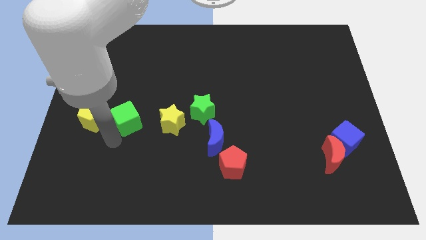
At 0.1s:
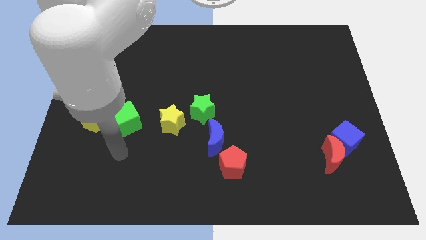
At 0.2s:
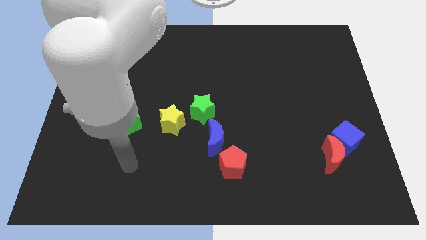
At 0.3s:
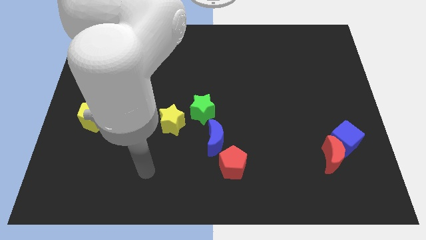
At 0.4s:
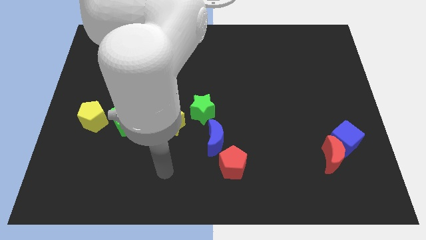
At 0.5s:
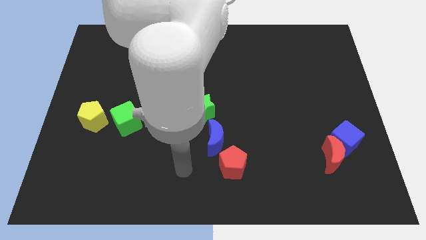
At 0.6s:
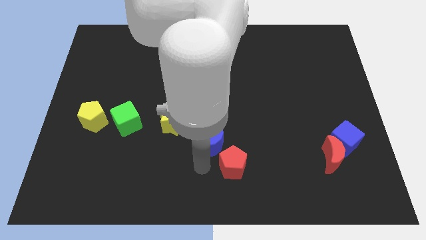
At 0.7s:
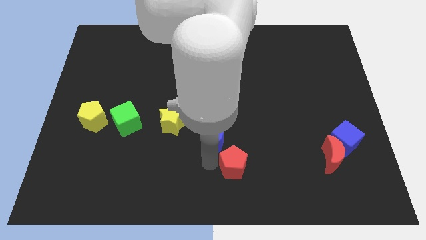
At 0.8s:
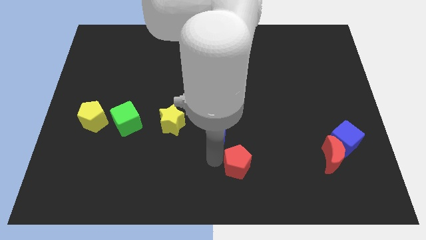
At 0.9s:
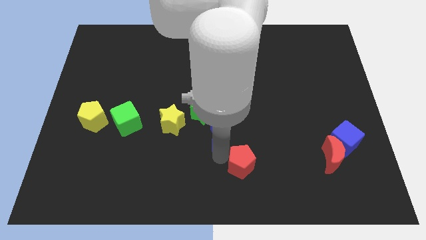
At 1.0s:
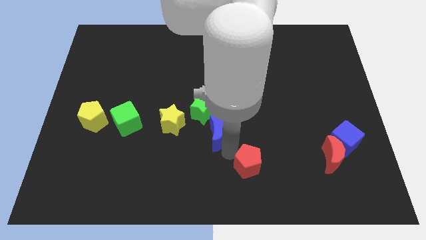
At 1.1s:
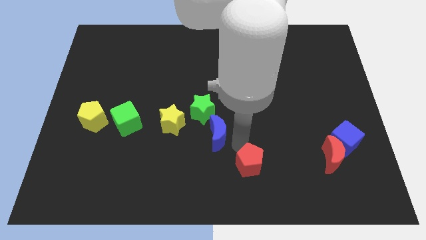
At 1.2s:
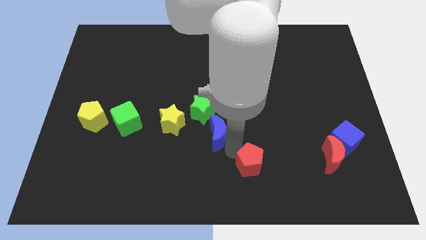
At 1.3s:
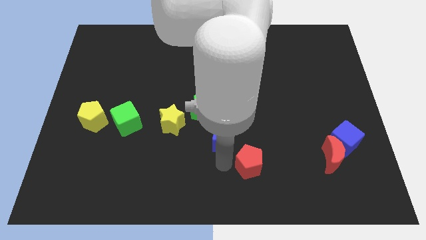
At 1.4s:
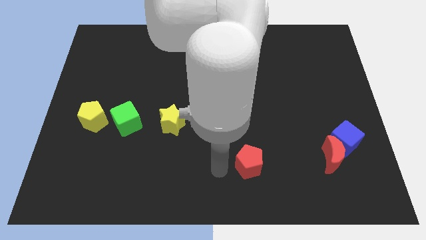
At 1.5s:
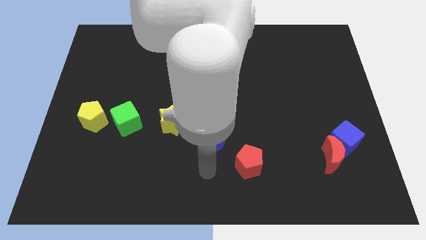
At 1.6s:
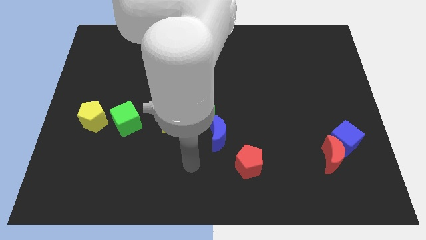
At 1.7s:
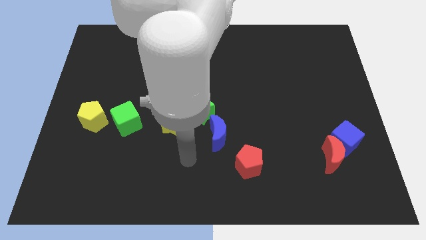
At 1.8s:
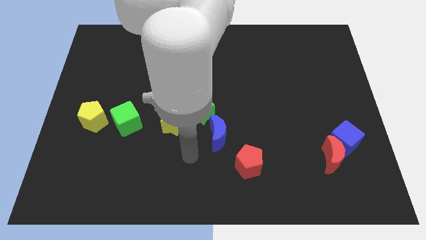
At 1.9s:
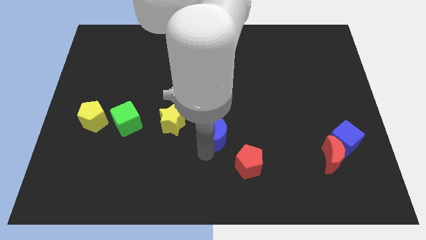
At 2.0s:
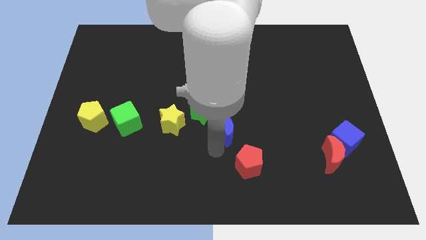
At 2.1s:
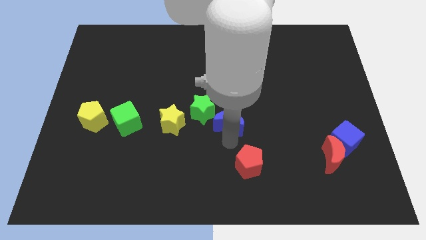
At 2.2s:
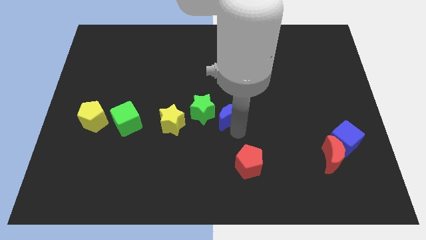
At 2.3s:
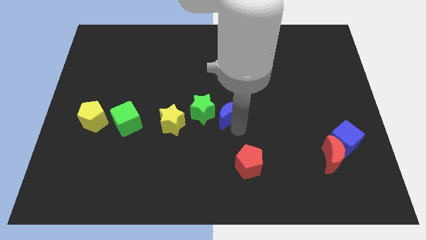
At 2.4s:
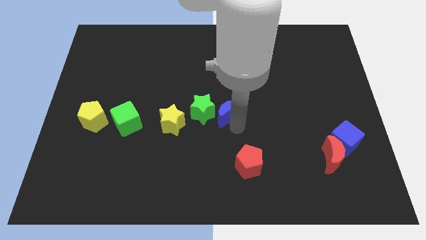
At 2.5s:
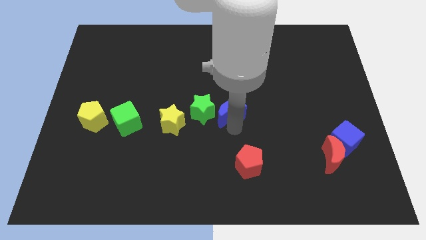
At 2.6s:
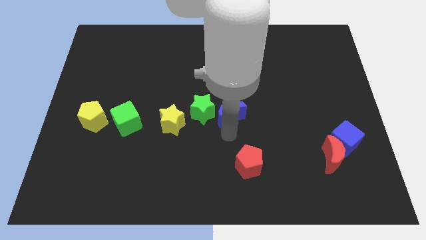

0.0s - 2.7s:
move the blue crescent to the right side of the green star

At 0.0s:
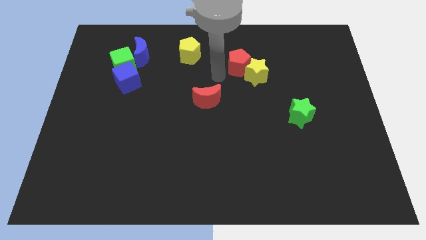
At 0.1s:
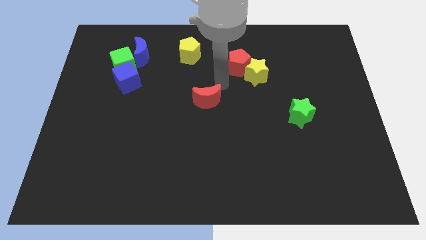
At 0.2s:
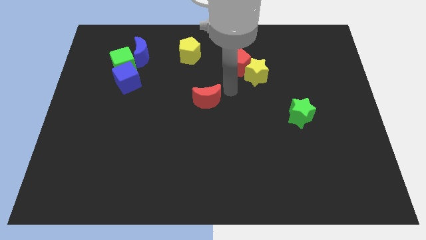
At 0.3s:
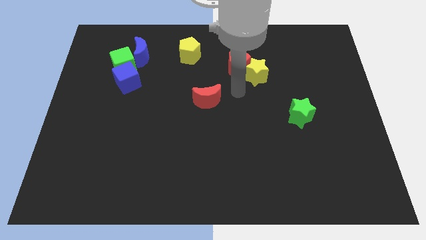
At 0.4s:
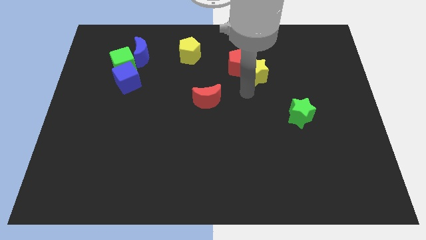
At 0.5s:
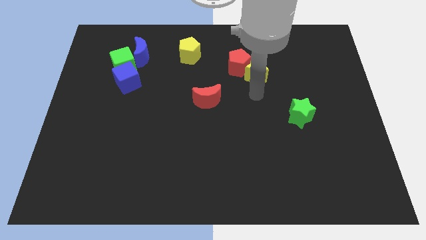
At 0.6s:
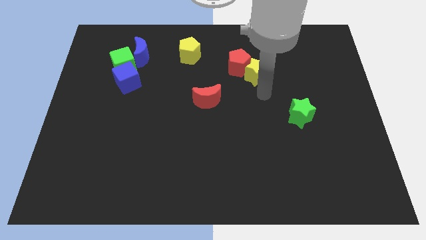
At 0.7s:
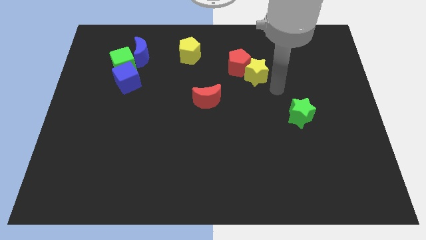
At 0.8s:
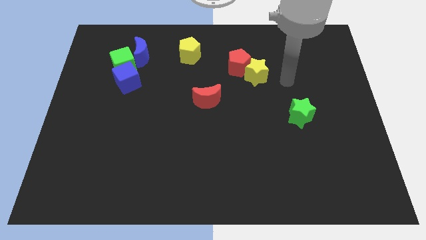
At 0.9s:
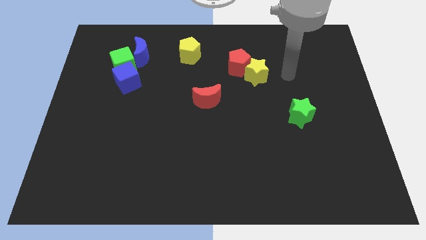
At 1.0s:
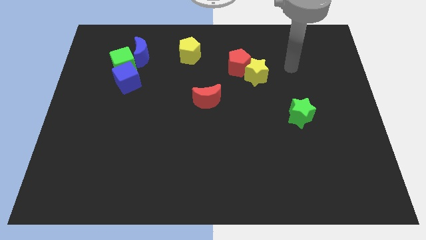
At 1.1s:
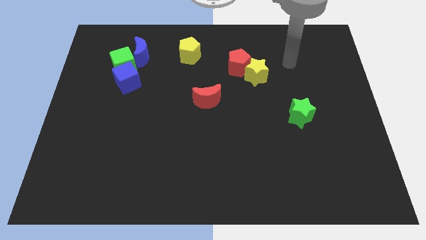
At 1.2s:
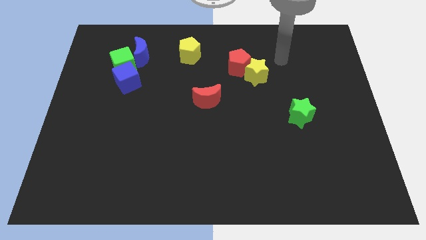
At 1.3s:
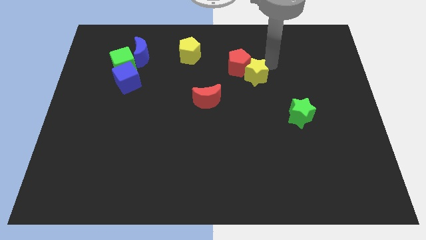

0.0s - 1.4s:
move your arm to the right of the yellow star

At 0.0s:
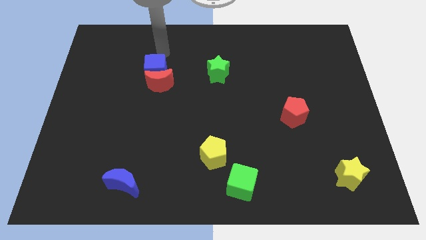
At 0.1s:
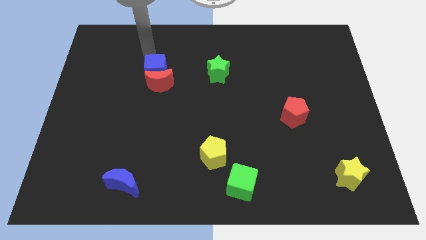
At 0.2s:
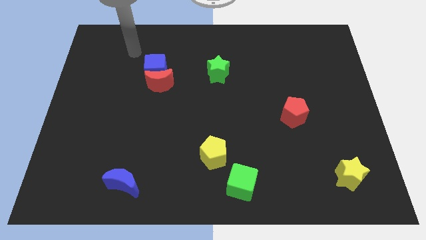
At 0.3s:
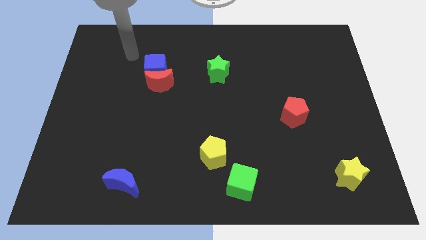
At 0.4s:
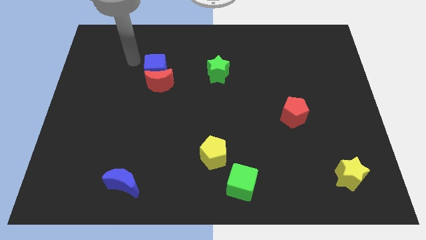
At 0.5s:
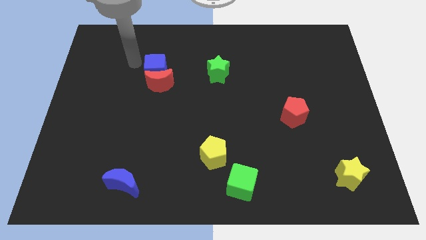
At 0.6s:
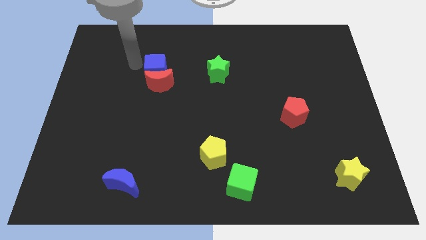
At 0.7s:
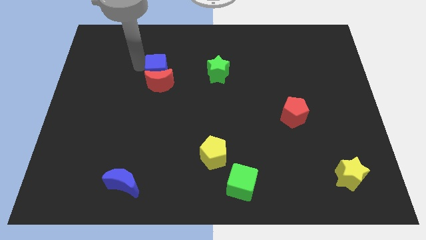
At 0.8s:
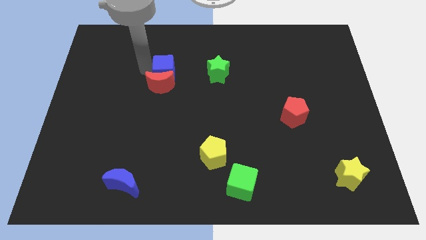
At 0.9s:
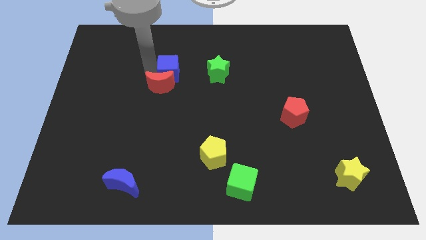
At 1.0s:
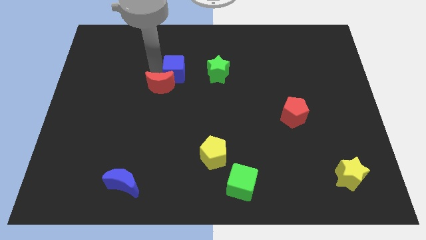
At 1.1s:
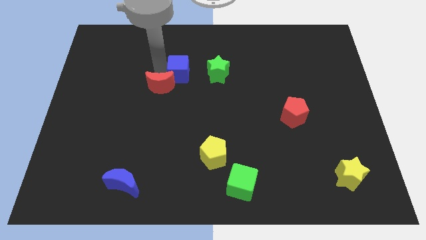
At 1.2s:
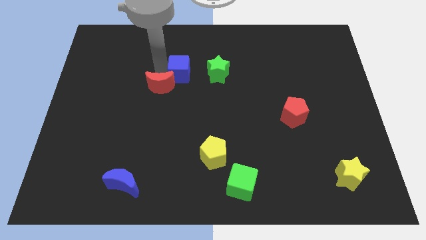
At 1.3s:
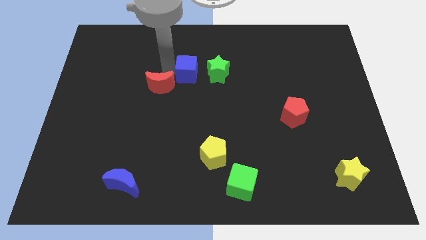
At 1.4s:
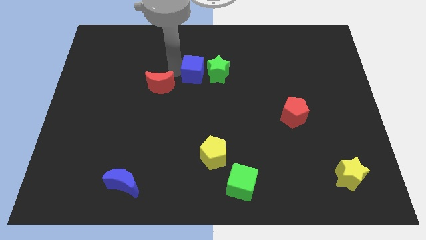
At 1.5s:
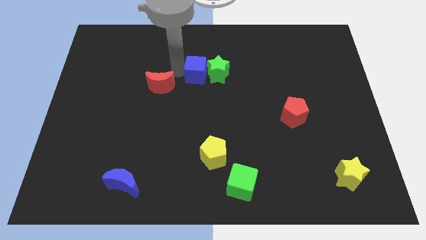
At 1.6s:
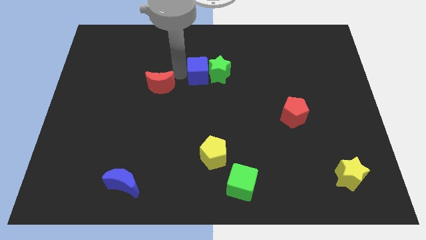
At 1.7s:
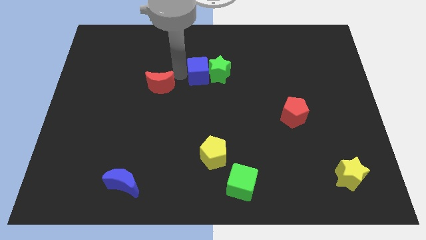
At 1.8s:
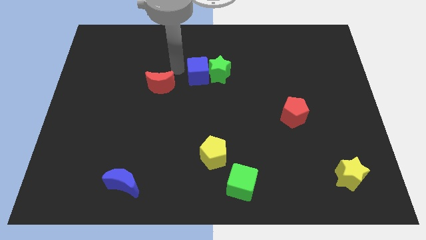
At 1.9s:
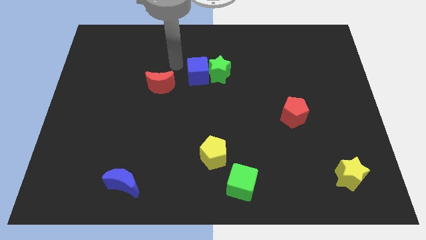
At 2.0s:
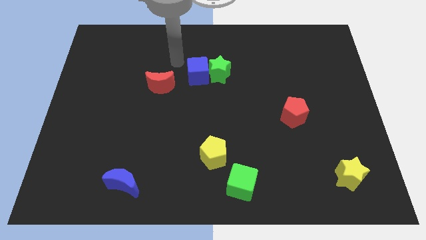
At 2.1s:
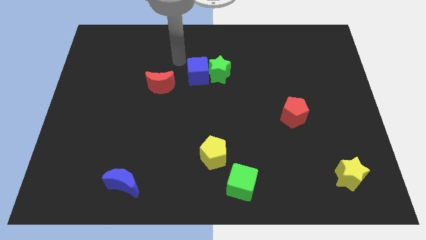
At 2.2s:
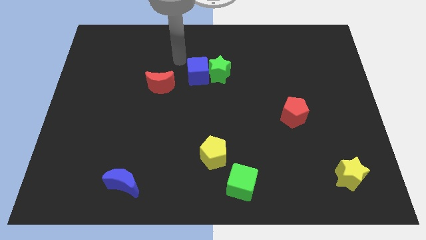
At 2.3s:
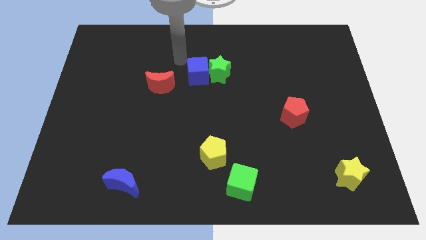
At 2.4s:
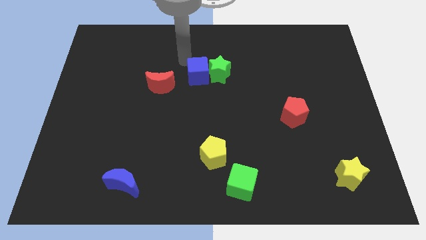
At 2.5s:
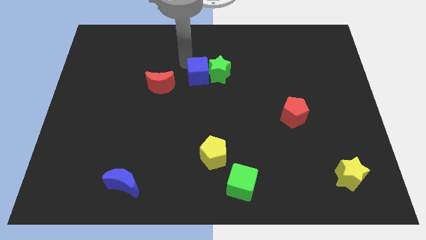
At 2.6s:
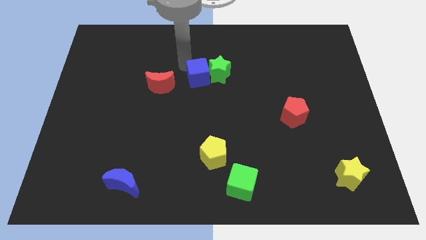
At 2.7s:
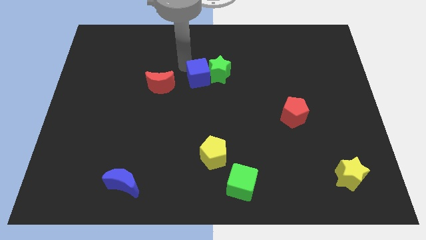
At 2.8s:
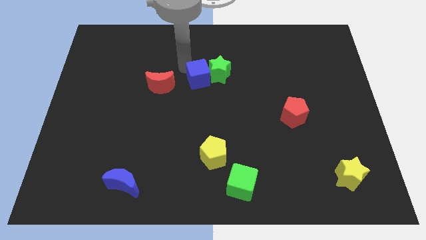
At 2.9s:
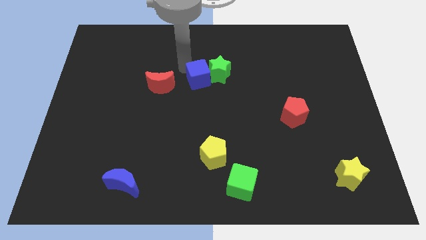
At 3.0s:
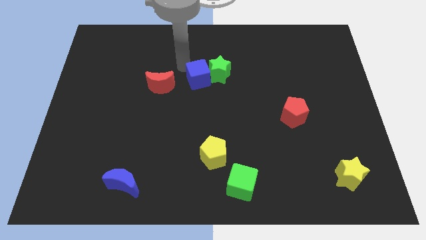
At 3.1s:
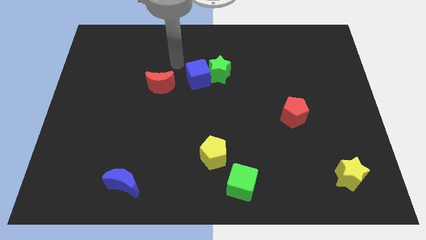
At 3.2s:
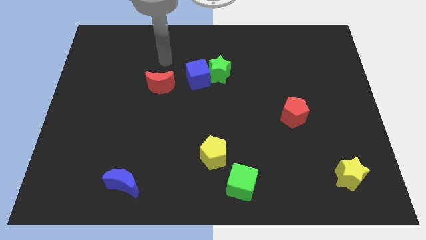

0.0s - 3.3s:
push the blue cube to the left of green star

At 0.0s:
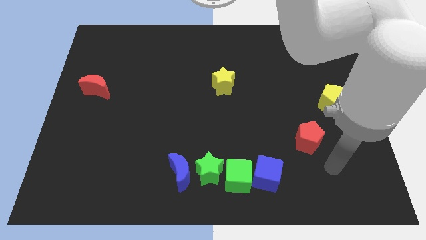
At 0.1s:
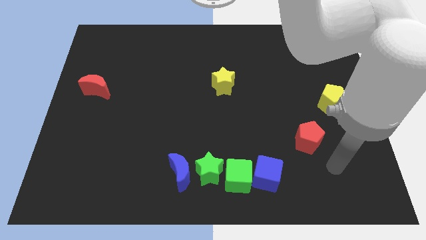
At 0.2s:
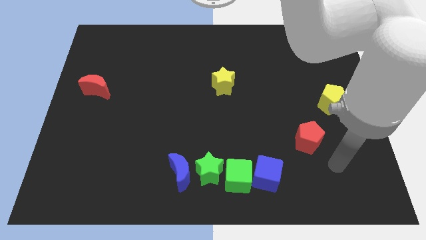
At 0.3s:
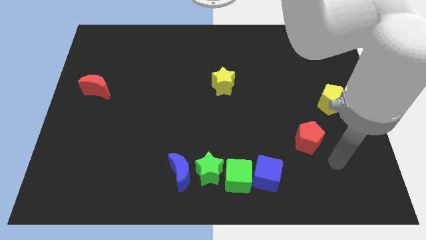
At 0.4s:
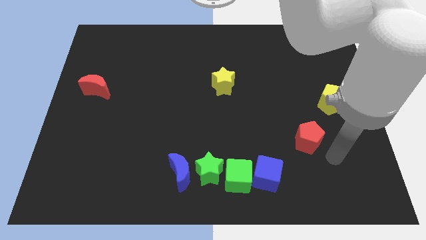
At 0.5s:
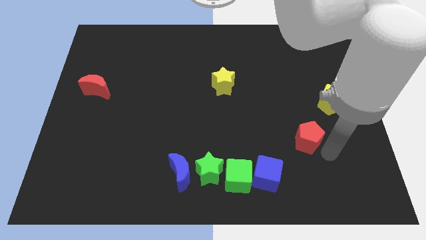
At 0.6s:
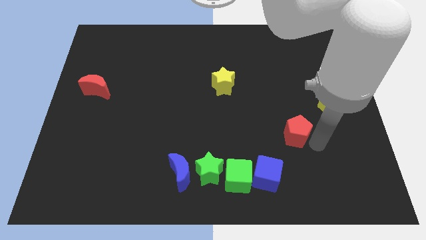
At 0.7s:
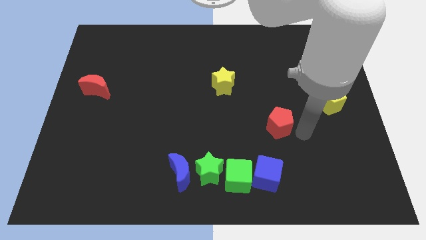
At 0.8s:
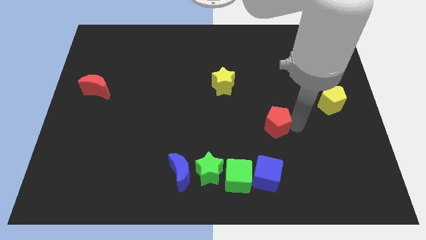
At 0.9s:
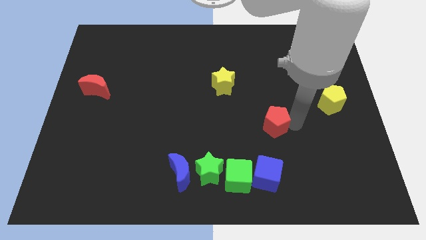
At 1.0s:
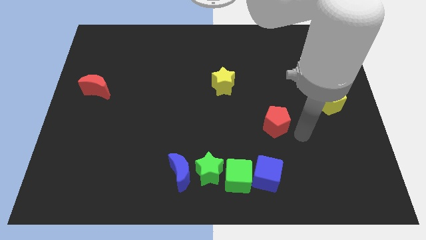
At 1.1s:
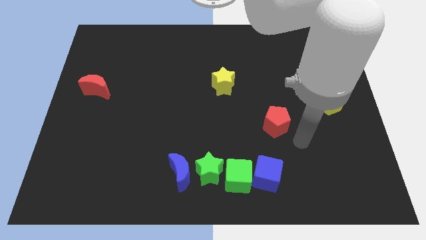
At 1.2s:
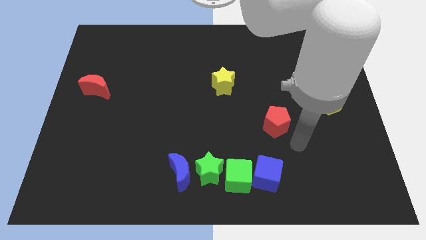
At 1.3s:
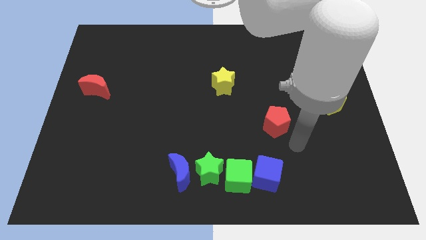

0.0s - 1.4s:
place the red pentagon above the blue cube

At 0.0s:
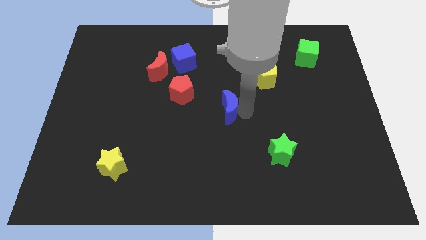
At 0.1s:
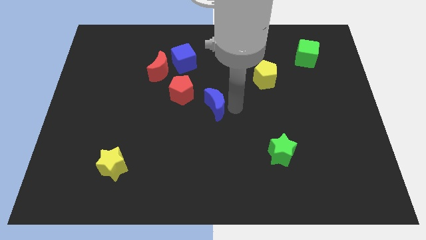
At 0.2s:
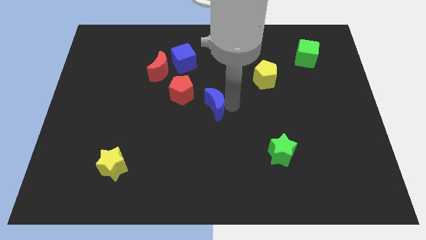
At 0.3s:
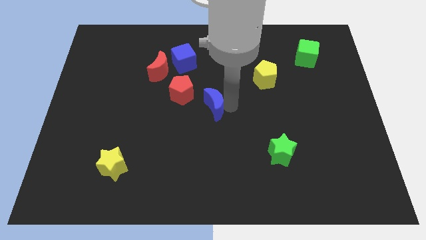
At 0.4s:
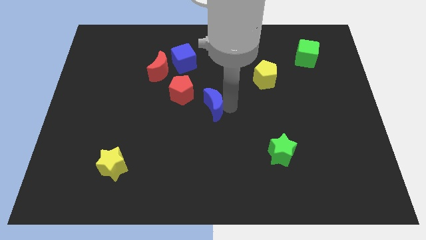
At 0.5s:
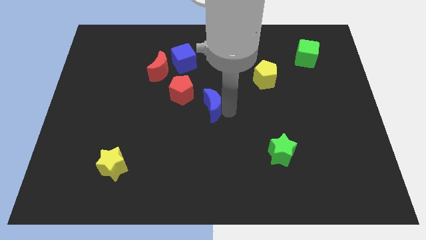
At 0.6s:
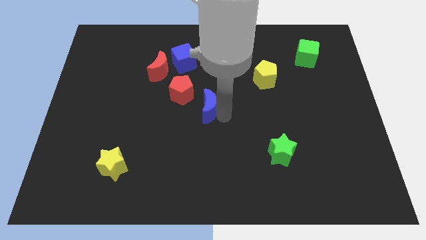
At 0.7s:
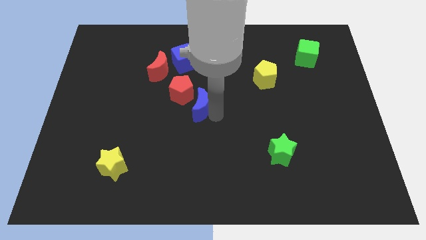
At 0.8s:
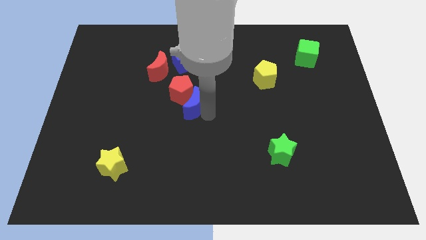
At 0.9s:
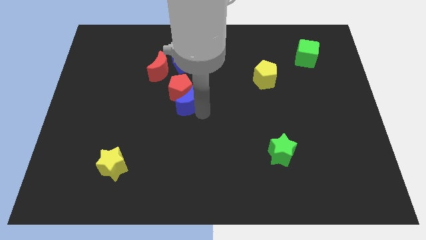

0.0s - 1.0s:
push the blue moon into the red pentagon
